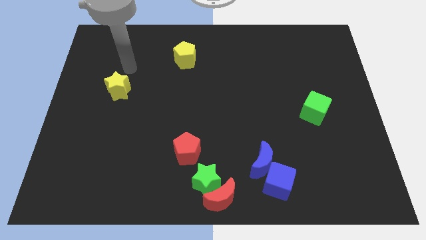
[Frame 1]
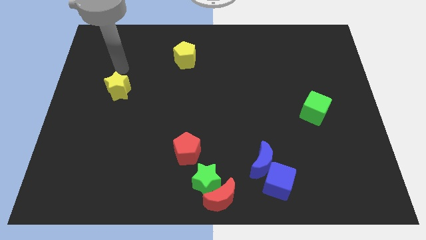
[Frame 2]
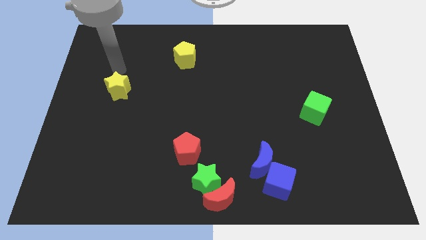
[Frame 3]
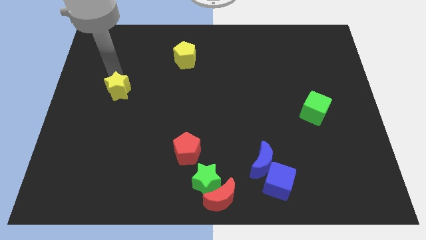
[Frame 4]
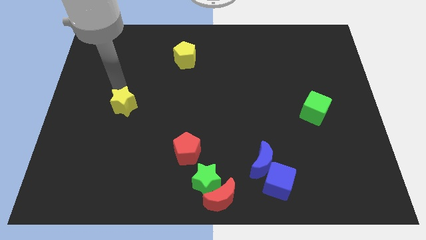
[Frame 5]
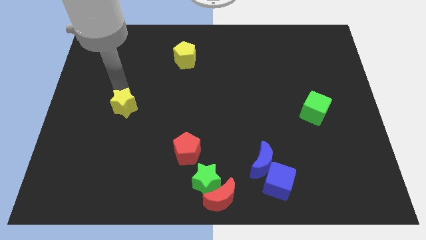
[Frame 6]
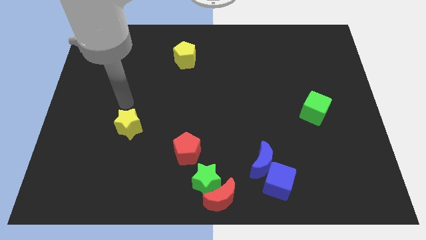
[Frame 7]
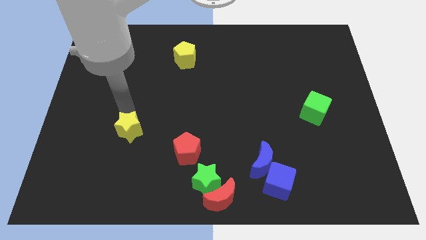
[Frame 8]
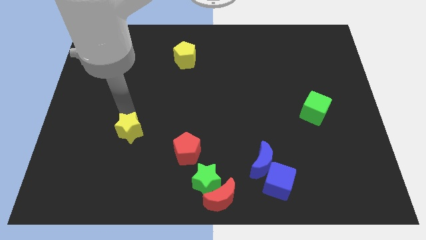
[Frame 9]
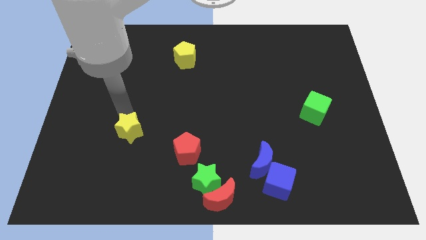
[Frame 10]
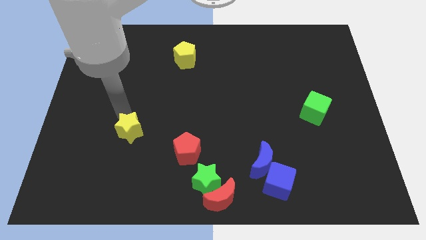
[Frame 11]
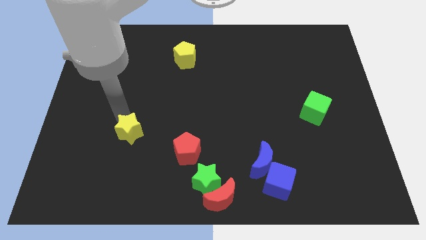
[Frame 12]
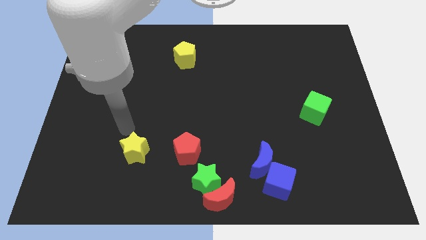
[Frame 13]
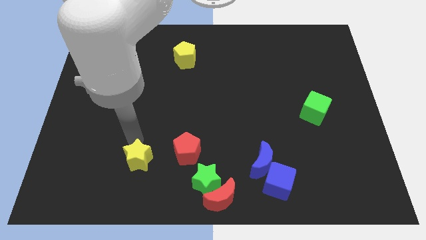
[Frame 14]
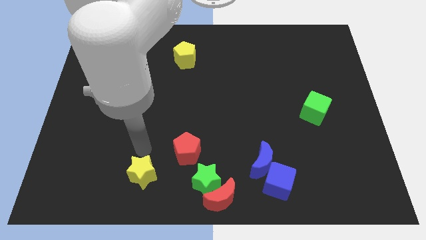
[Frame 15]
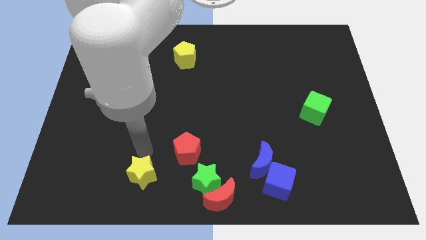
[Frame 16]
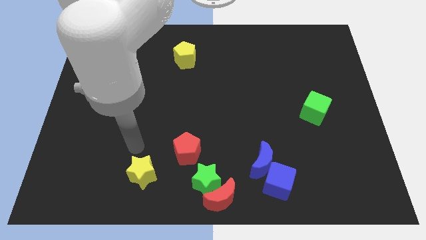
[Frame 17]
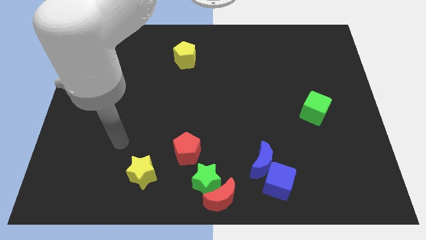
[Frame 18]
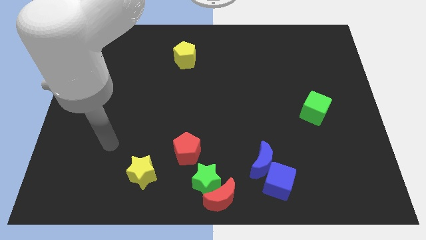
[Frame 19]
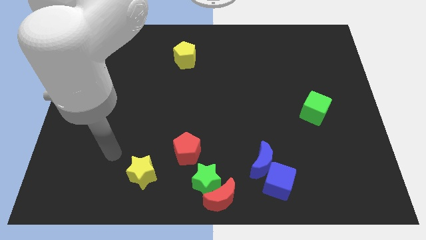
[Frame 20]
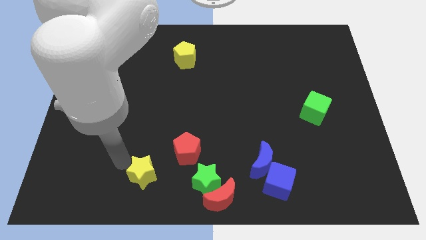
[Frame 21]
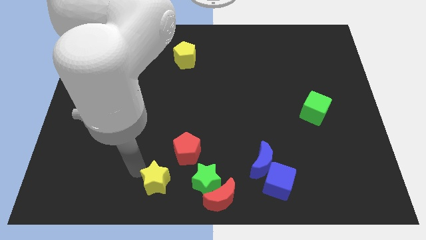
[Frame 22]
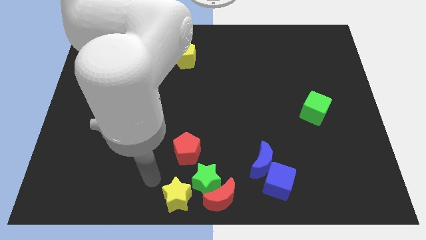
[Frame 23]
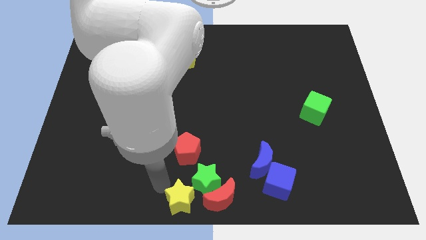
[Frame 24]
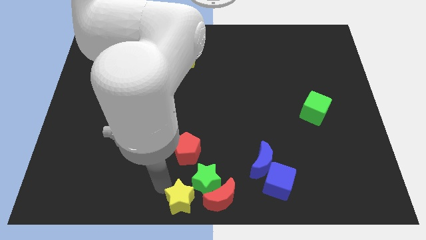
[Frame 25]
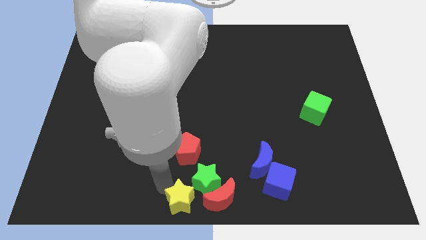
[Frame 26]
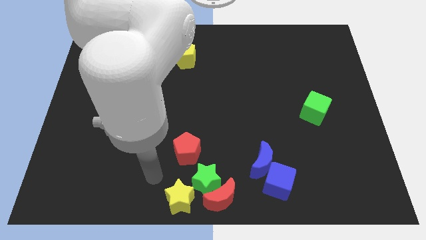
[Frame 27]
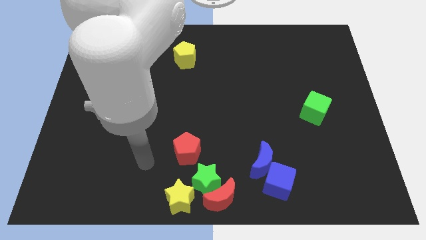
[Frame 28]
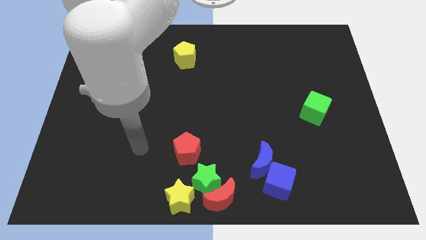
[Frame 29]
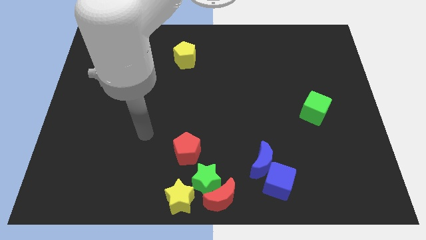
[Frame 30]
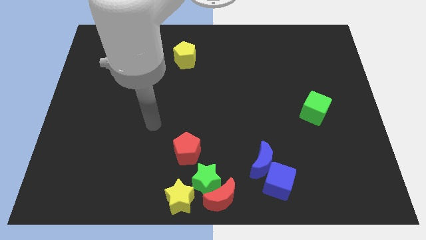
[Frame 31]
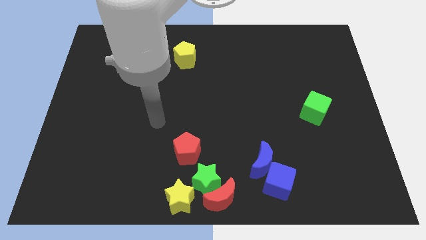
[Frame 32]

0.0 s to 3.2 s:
slide the yellow star diagonally bottom left to the green star

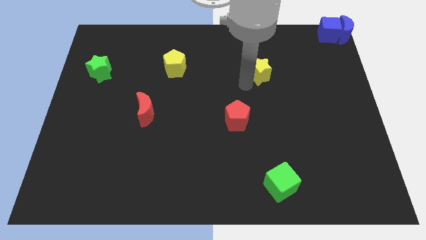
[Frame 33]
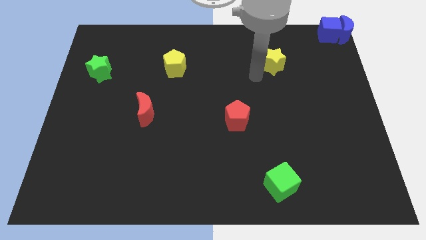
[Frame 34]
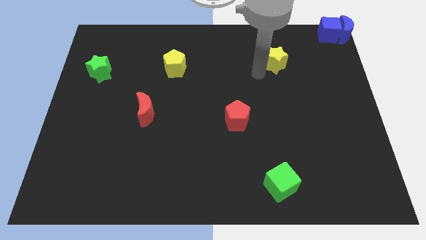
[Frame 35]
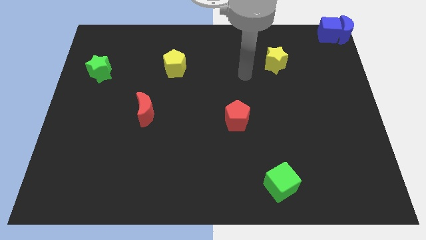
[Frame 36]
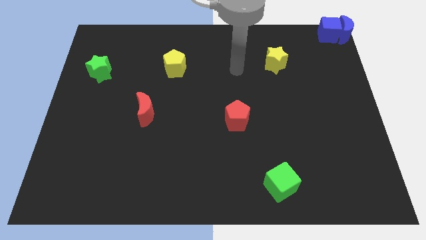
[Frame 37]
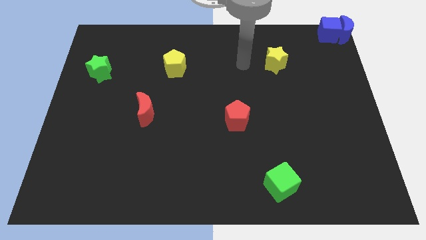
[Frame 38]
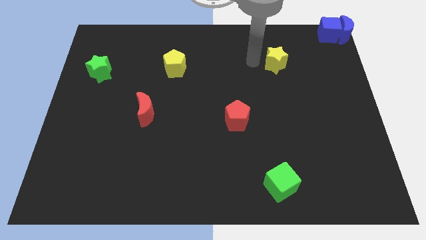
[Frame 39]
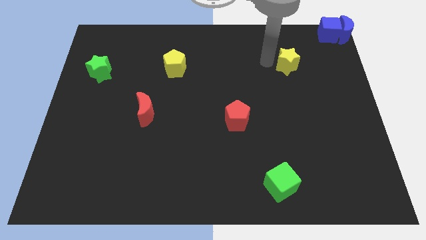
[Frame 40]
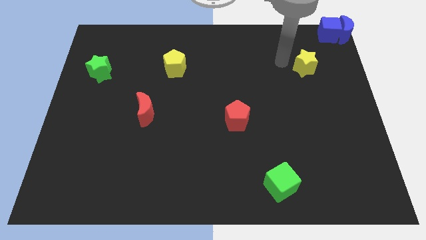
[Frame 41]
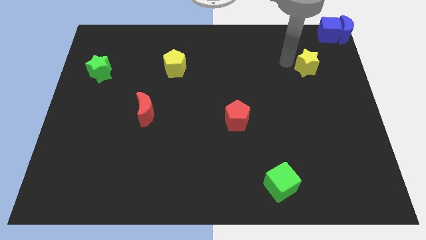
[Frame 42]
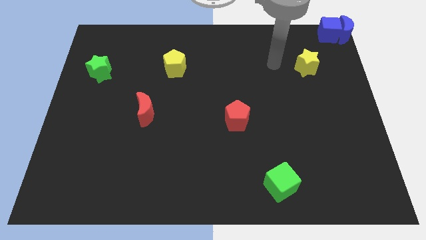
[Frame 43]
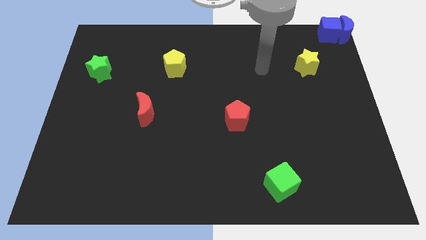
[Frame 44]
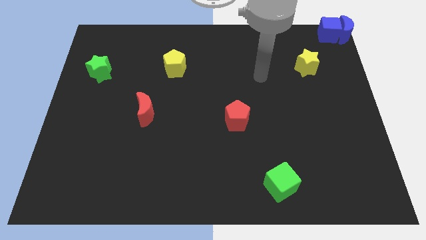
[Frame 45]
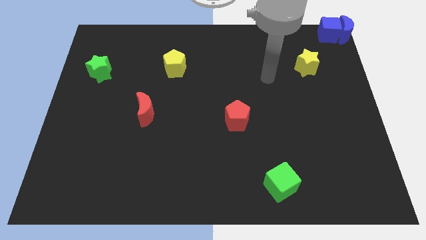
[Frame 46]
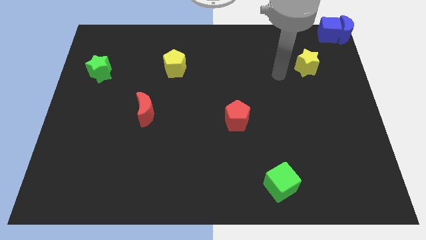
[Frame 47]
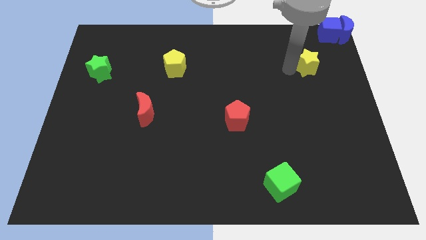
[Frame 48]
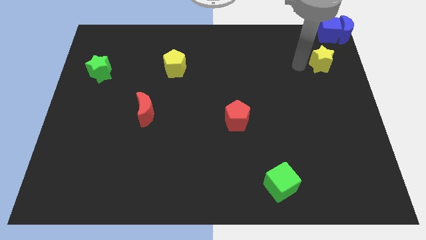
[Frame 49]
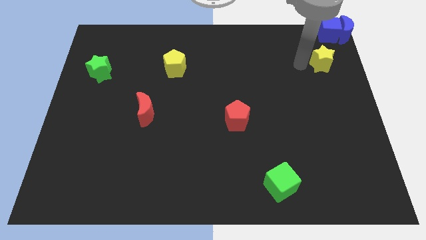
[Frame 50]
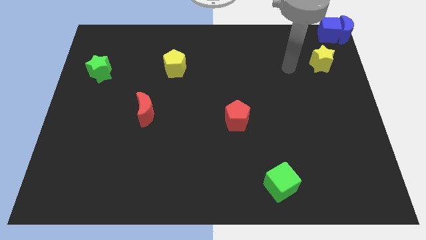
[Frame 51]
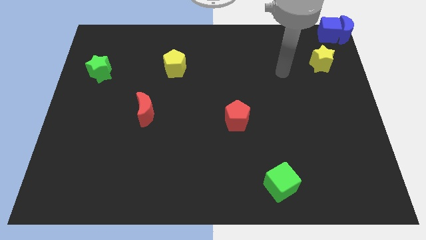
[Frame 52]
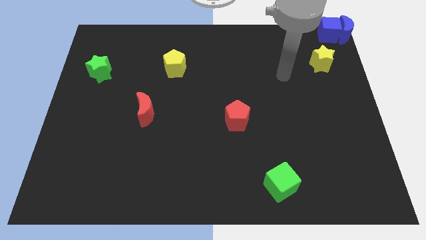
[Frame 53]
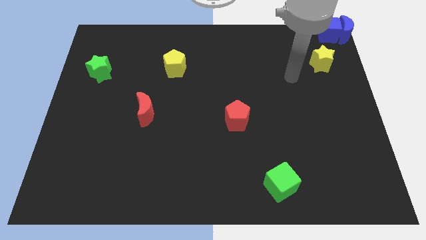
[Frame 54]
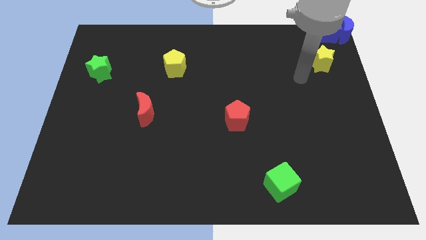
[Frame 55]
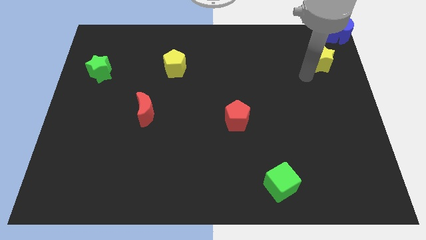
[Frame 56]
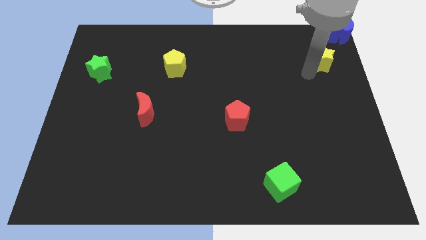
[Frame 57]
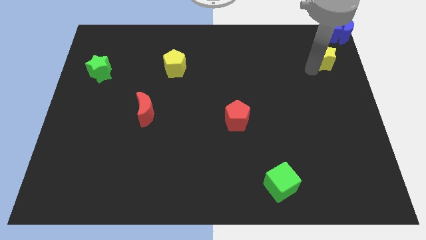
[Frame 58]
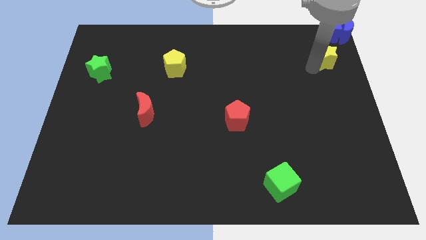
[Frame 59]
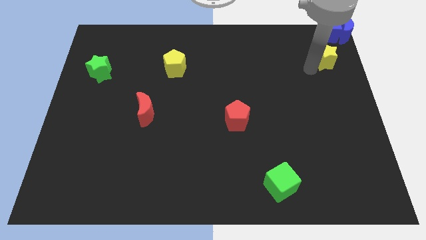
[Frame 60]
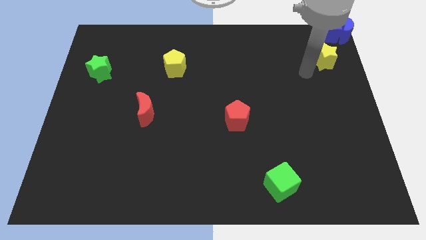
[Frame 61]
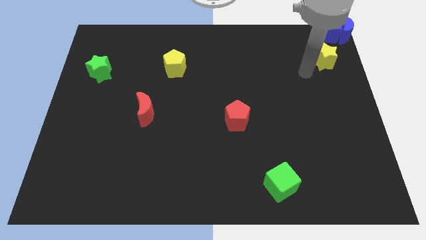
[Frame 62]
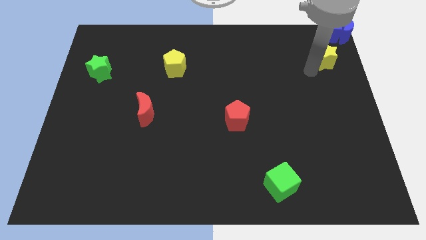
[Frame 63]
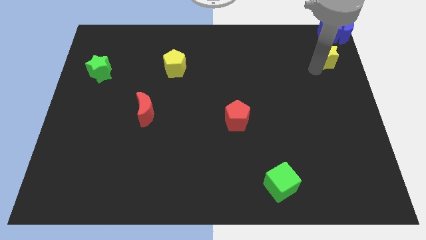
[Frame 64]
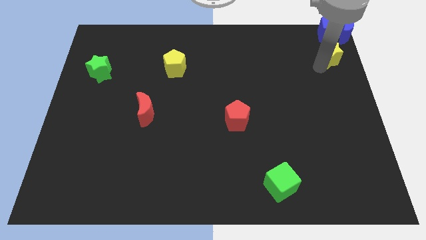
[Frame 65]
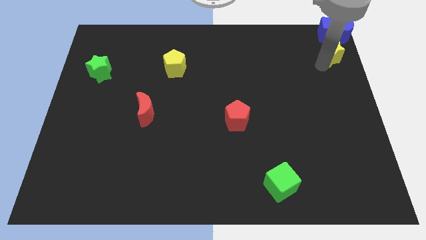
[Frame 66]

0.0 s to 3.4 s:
place the yellow star below the blue cube

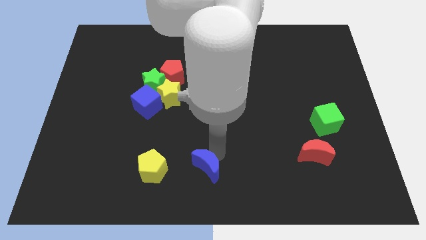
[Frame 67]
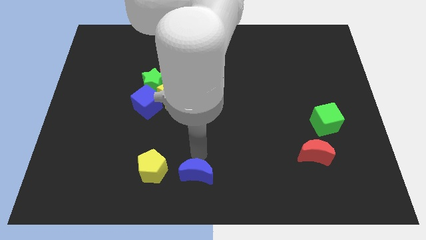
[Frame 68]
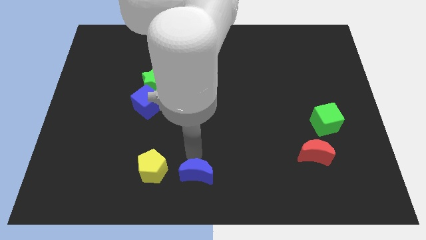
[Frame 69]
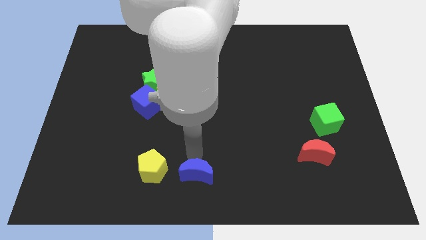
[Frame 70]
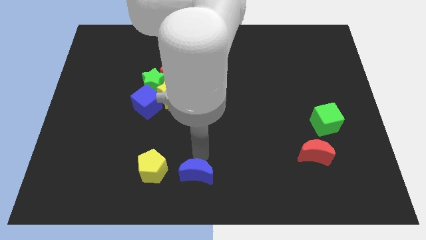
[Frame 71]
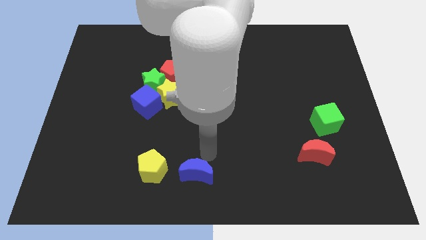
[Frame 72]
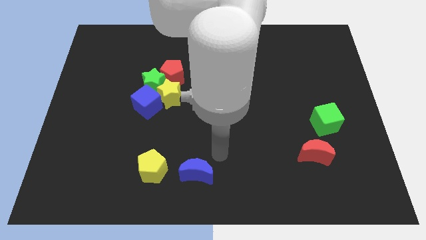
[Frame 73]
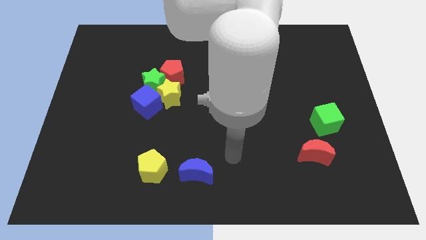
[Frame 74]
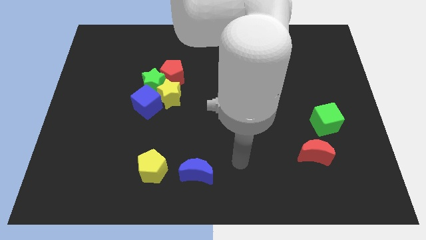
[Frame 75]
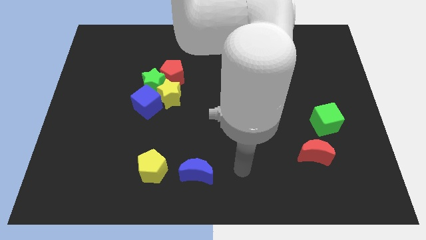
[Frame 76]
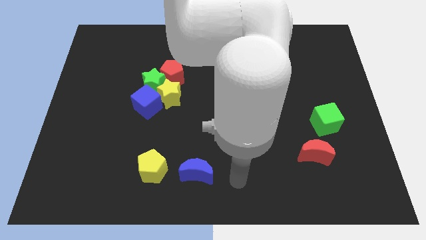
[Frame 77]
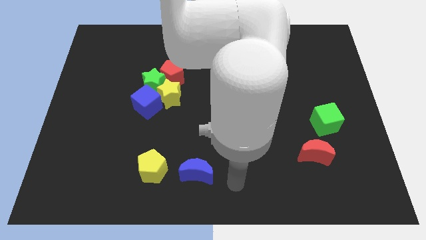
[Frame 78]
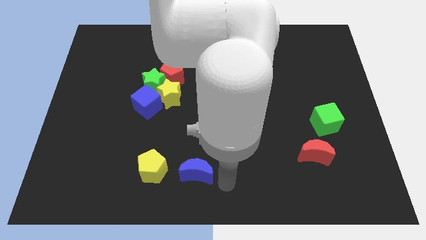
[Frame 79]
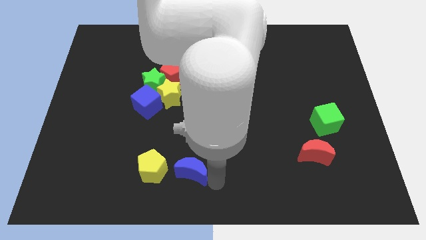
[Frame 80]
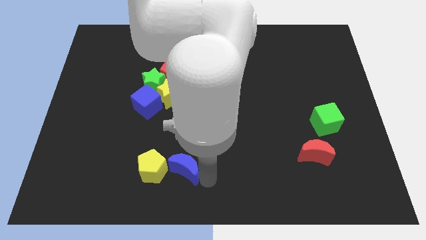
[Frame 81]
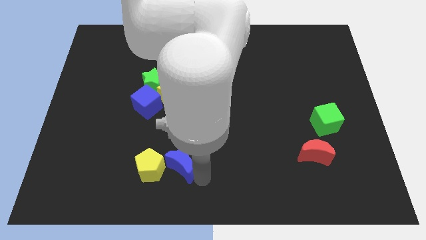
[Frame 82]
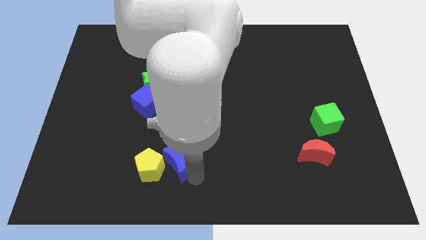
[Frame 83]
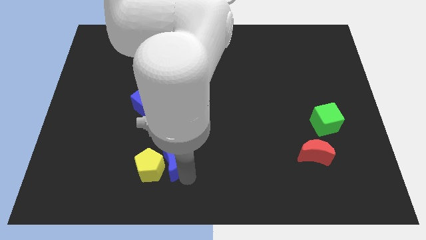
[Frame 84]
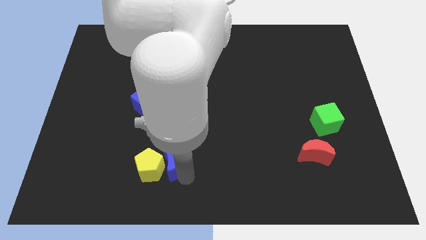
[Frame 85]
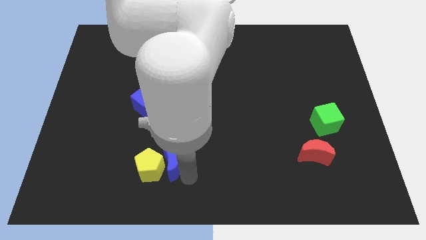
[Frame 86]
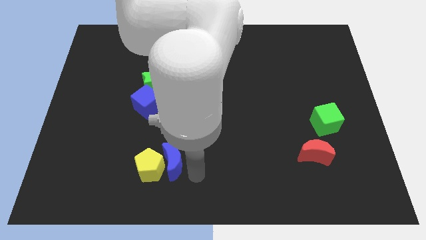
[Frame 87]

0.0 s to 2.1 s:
push the blue cube into the yellow pentagon

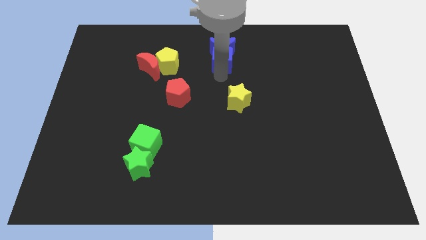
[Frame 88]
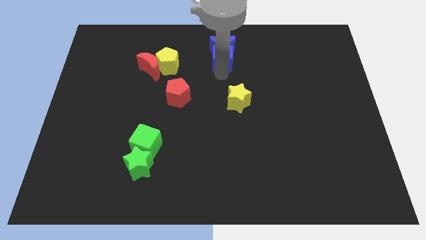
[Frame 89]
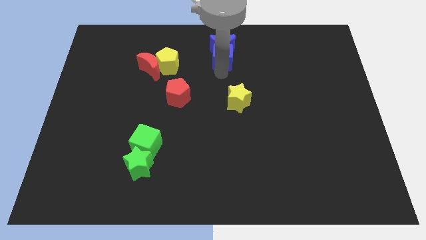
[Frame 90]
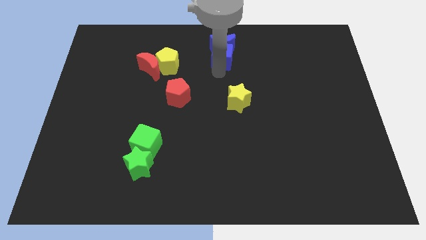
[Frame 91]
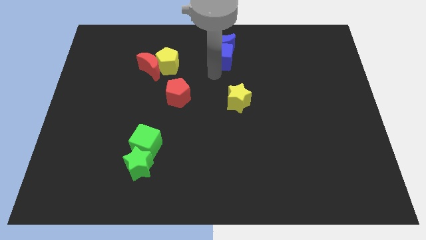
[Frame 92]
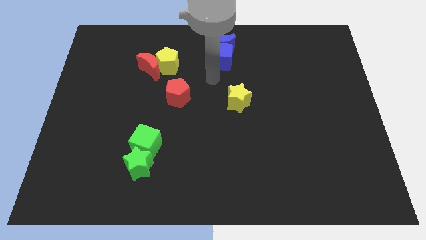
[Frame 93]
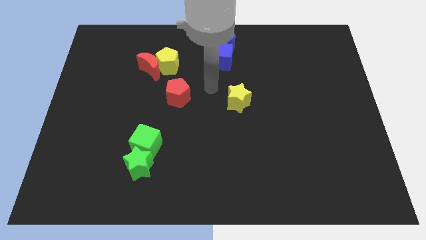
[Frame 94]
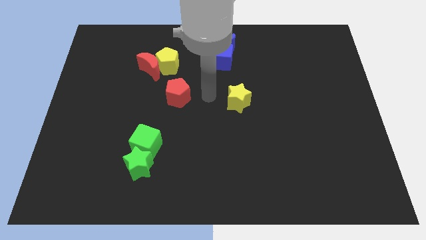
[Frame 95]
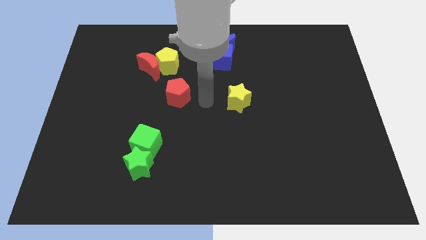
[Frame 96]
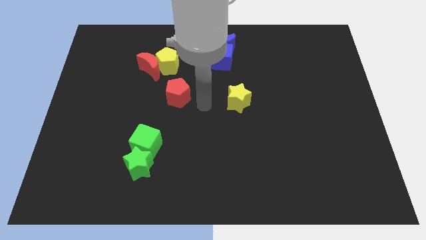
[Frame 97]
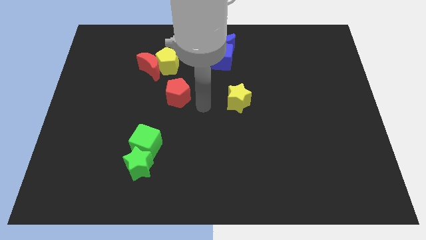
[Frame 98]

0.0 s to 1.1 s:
move the blue blocks towards the top center of the board
